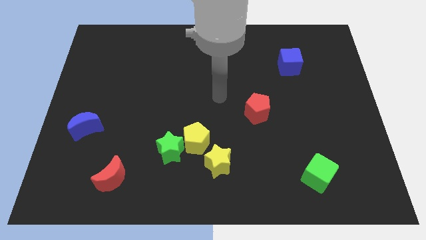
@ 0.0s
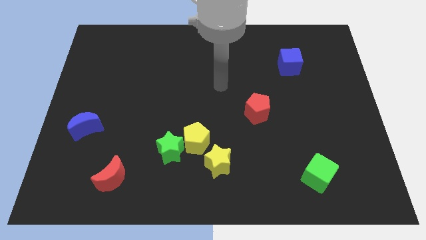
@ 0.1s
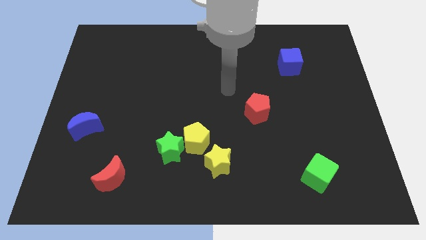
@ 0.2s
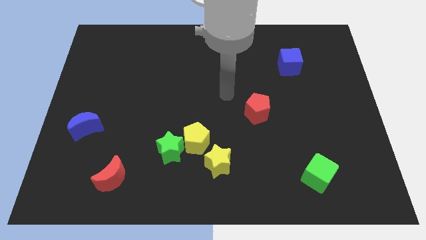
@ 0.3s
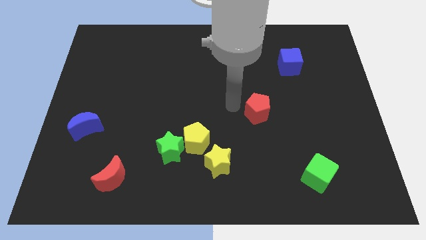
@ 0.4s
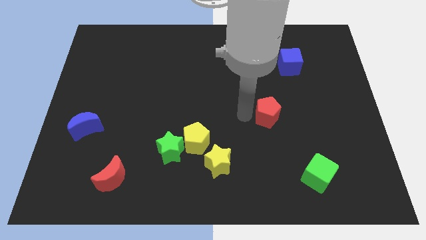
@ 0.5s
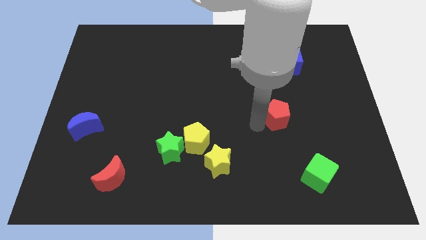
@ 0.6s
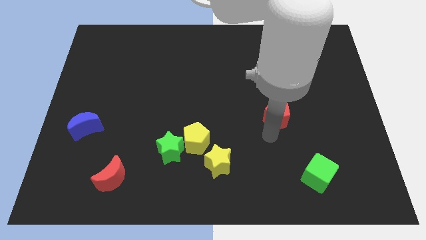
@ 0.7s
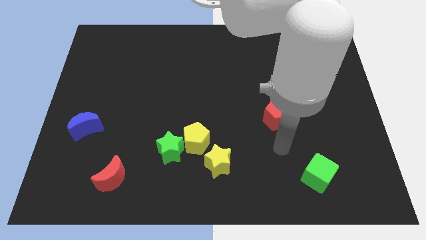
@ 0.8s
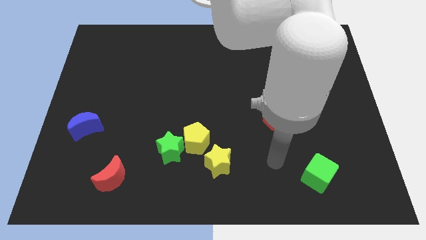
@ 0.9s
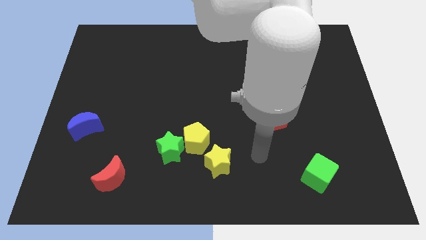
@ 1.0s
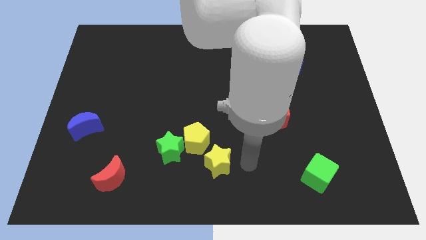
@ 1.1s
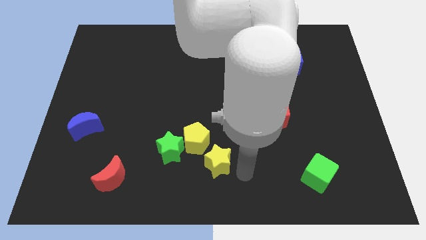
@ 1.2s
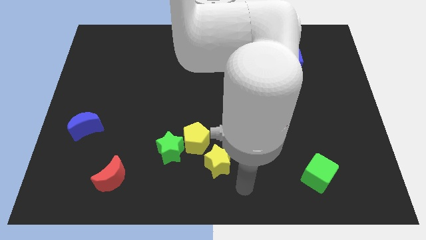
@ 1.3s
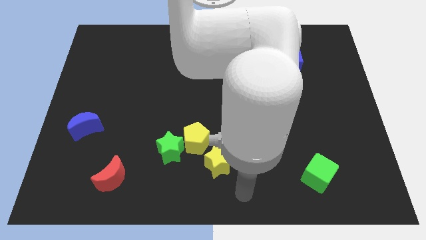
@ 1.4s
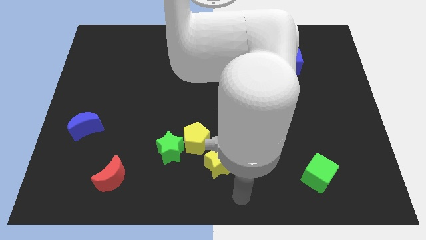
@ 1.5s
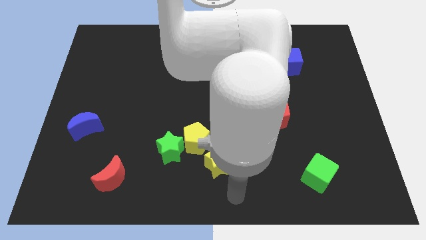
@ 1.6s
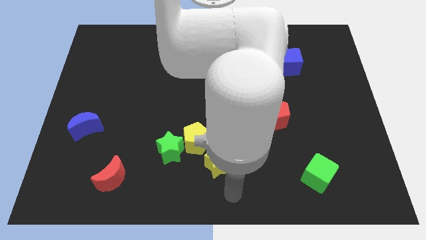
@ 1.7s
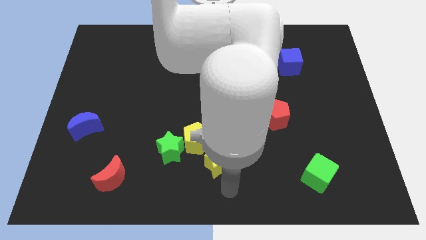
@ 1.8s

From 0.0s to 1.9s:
place the arm to the bottom side of the yellow star

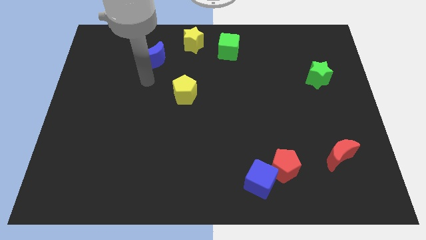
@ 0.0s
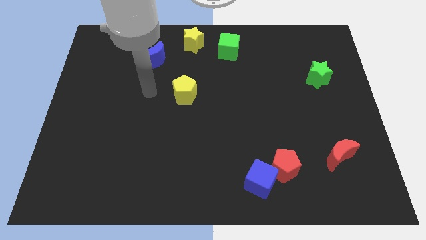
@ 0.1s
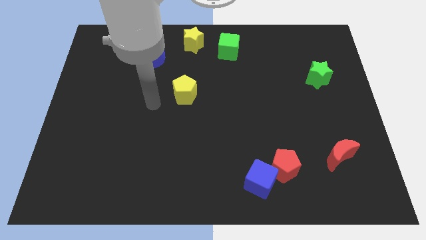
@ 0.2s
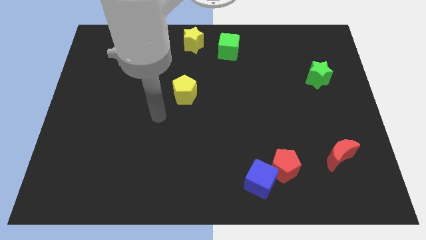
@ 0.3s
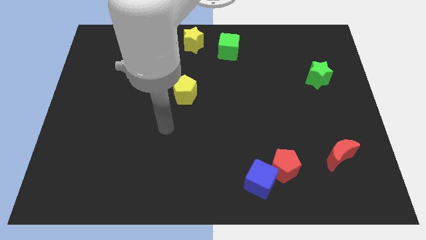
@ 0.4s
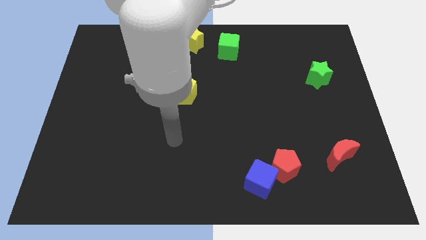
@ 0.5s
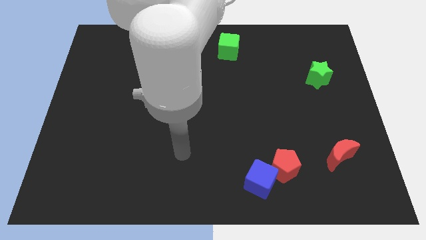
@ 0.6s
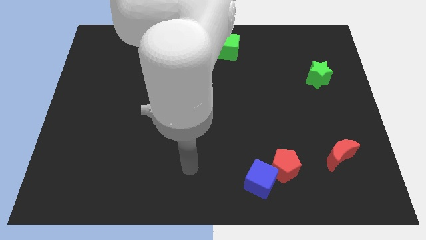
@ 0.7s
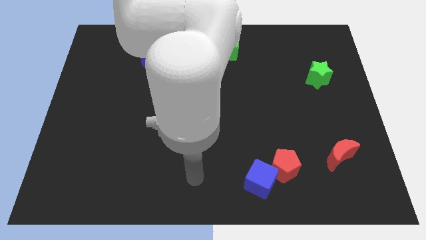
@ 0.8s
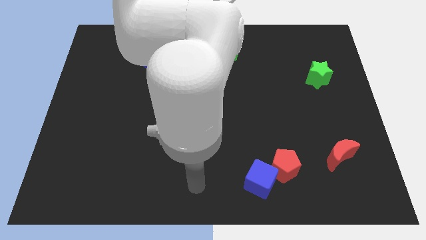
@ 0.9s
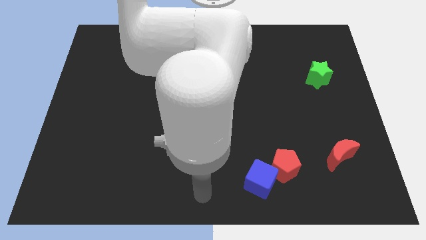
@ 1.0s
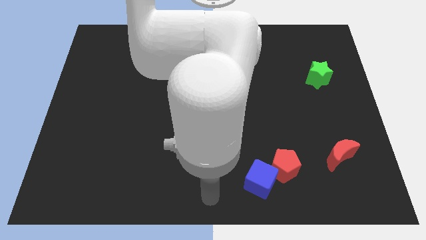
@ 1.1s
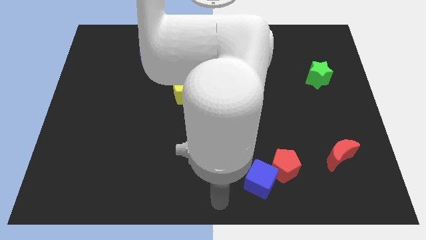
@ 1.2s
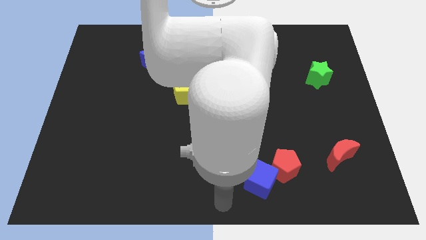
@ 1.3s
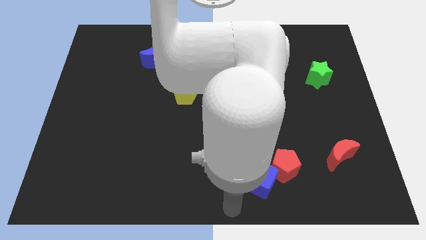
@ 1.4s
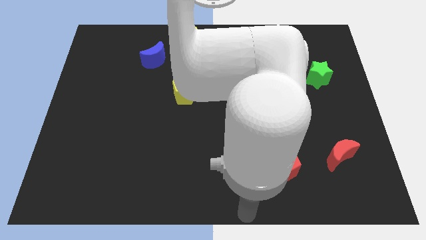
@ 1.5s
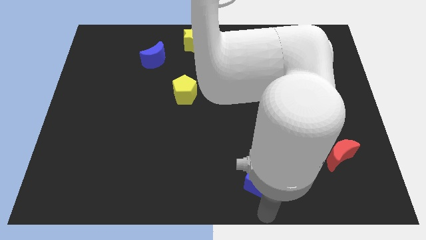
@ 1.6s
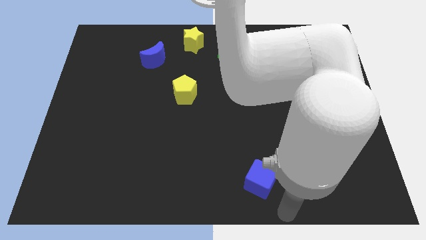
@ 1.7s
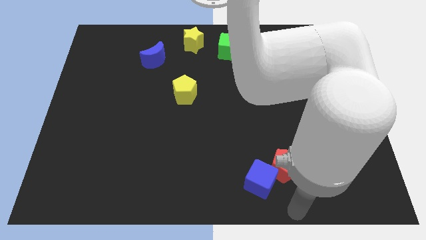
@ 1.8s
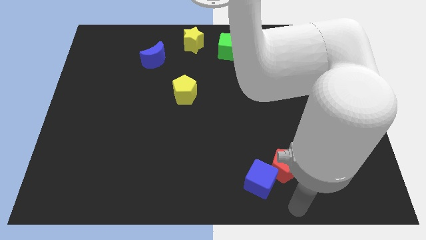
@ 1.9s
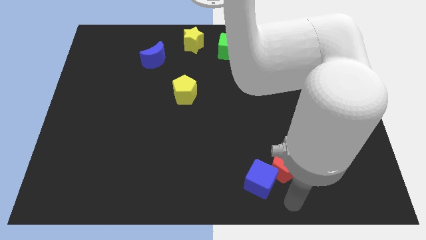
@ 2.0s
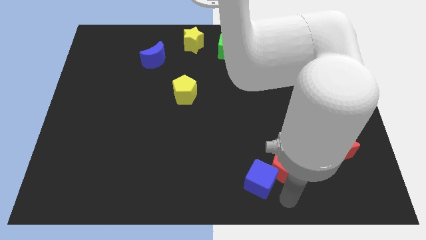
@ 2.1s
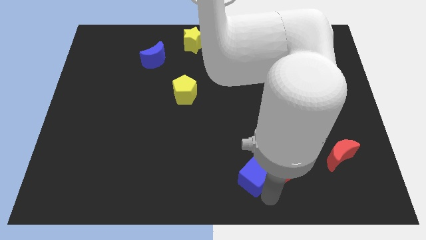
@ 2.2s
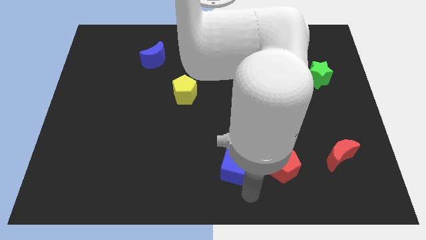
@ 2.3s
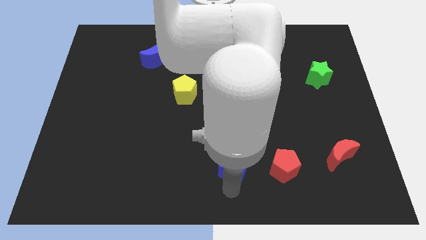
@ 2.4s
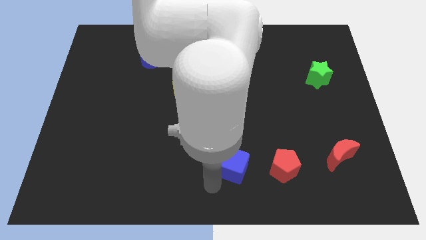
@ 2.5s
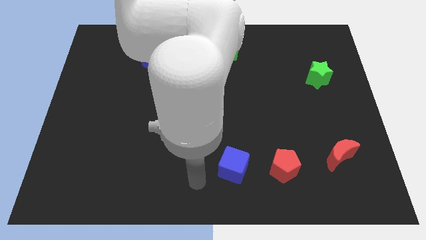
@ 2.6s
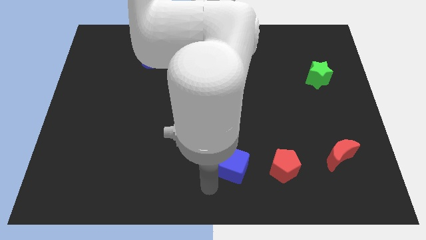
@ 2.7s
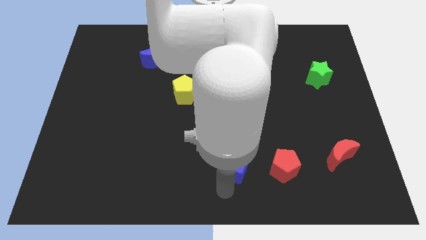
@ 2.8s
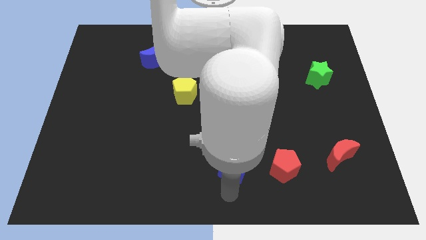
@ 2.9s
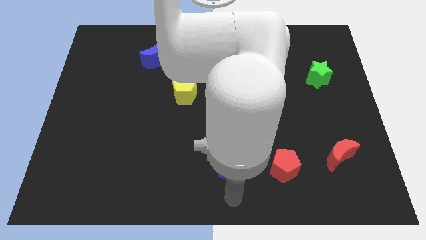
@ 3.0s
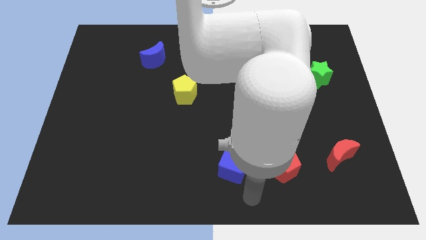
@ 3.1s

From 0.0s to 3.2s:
separate the red pentagon and blue cube

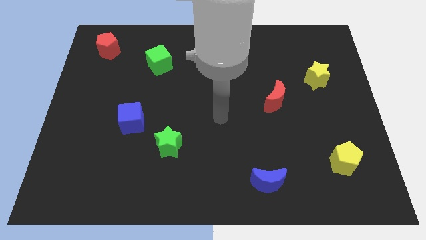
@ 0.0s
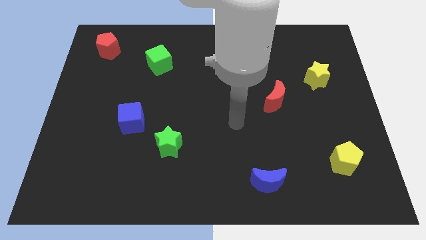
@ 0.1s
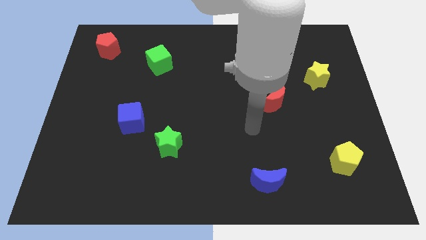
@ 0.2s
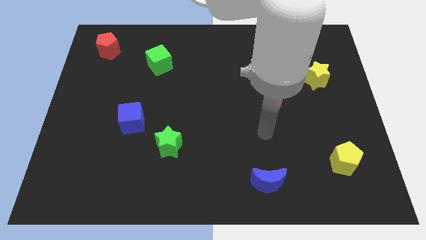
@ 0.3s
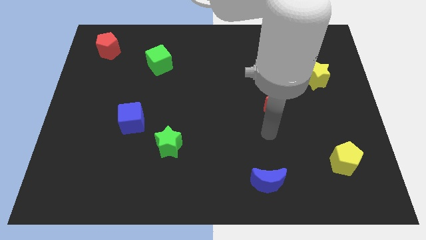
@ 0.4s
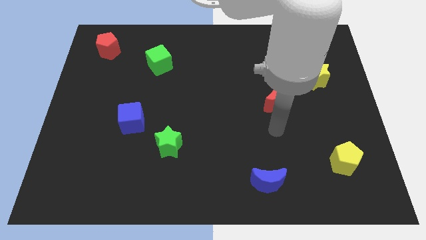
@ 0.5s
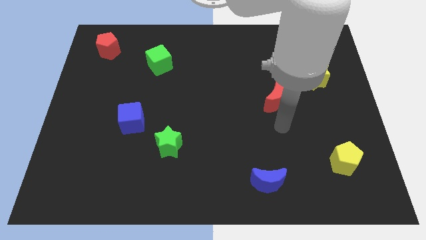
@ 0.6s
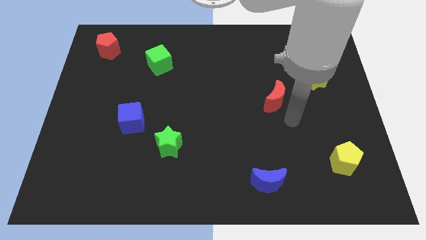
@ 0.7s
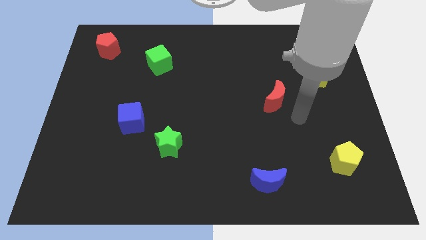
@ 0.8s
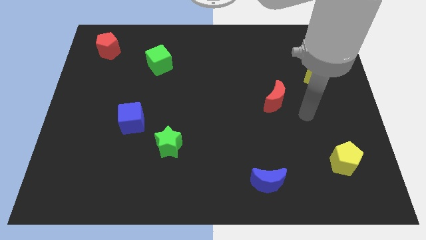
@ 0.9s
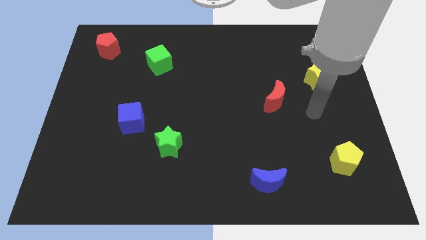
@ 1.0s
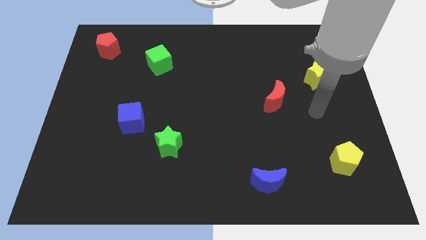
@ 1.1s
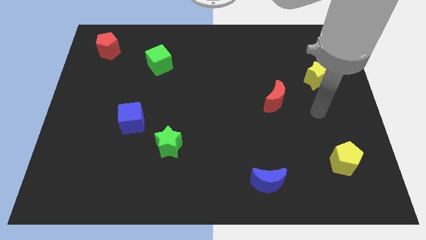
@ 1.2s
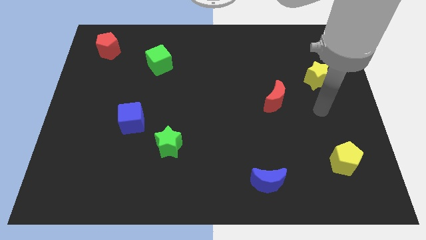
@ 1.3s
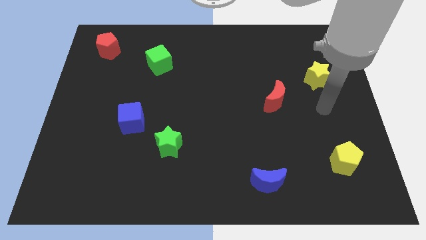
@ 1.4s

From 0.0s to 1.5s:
place the arm below the yellow star

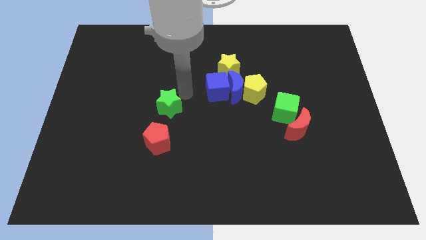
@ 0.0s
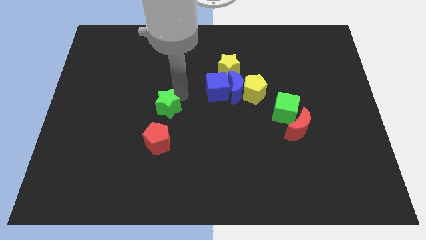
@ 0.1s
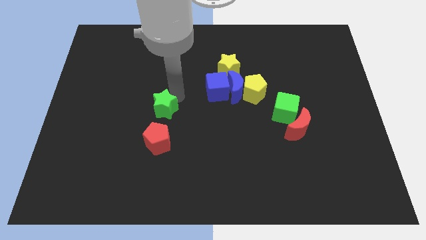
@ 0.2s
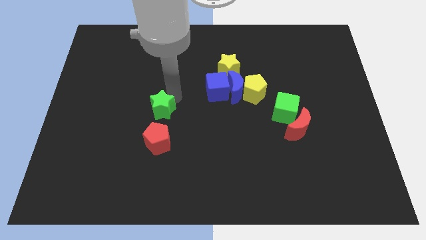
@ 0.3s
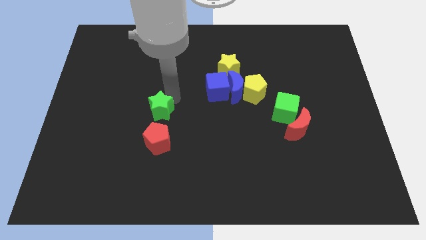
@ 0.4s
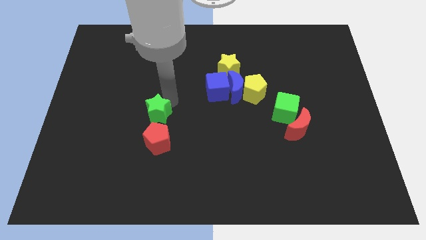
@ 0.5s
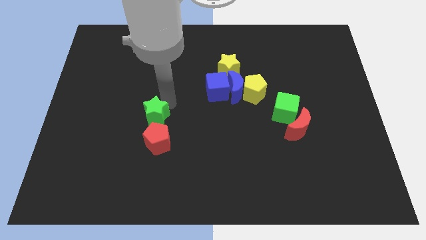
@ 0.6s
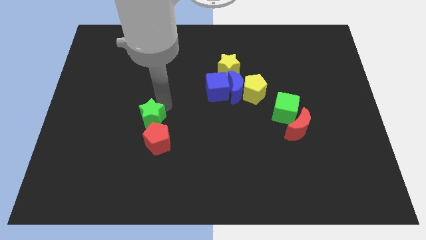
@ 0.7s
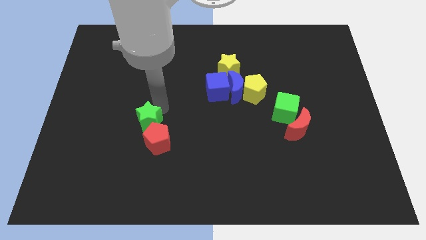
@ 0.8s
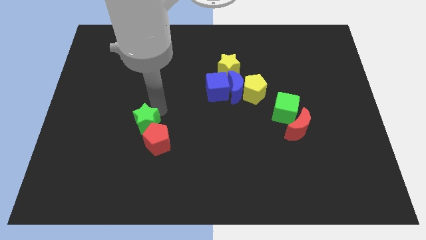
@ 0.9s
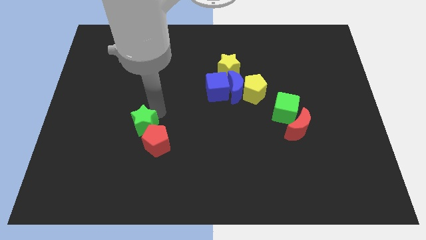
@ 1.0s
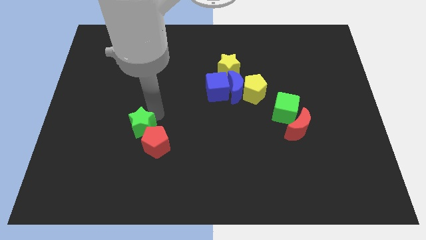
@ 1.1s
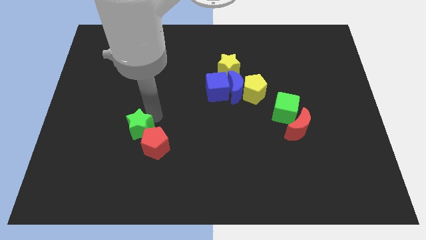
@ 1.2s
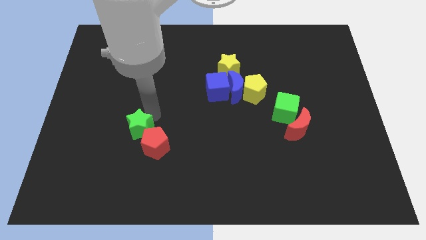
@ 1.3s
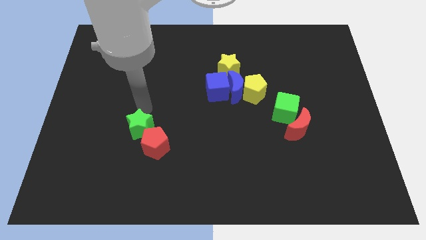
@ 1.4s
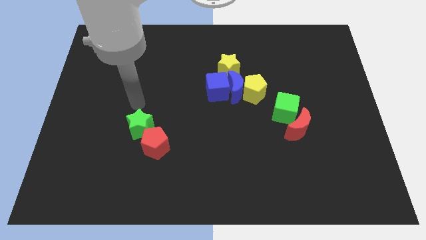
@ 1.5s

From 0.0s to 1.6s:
move the green star to the top left of red pentagon

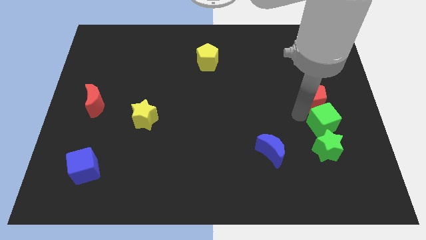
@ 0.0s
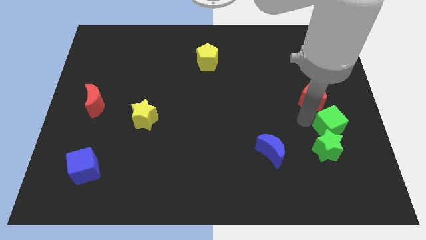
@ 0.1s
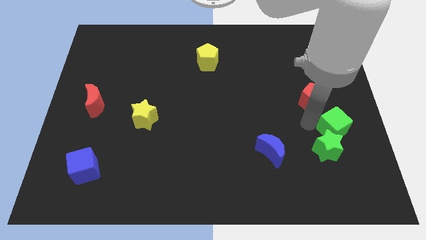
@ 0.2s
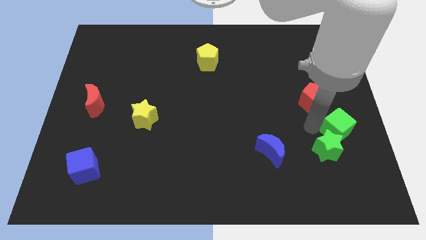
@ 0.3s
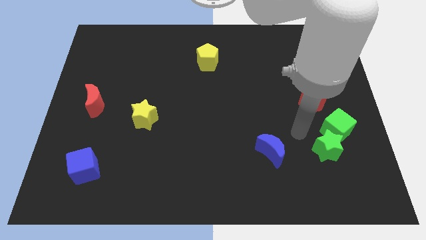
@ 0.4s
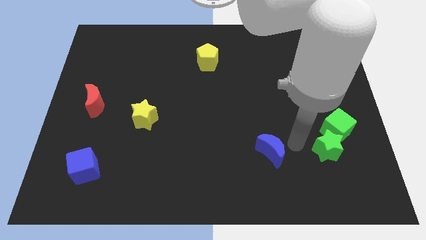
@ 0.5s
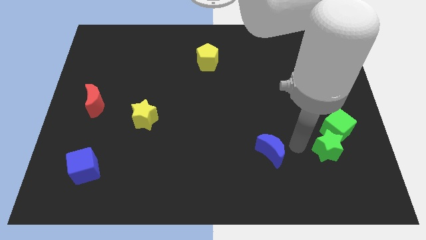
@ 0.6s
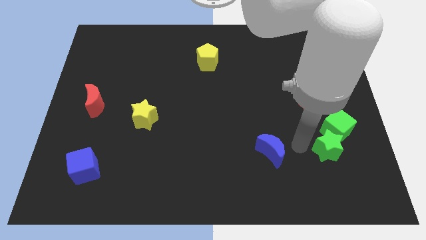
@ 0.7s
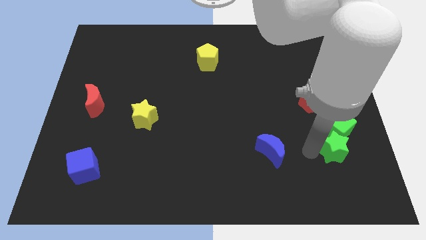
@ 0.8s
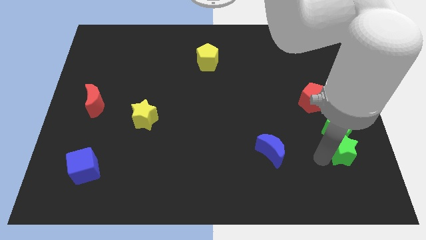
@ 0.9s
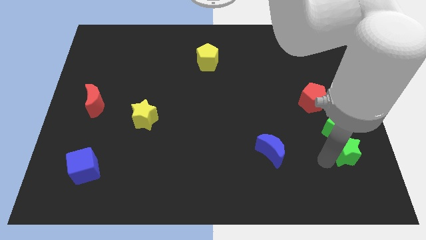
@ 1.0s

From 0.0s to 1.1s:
place the green star below the green cube
